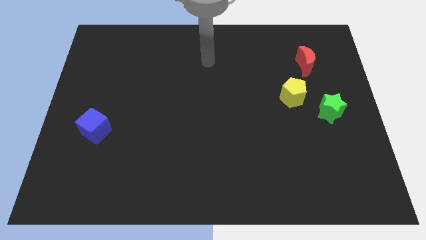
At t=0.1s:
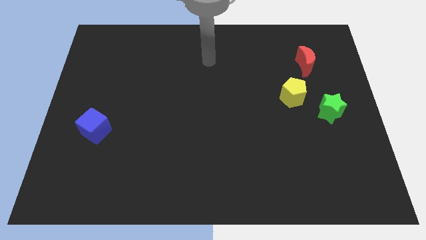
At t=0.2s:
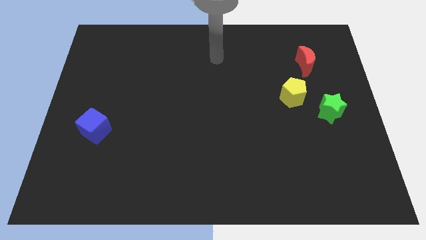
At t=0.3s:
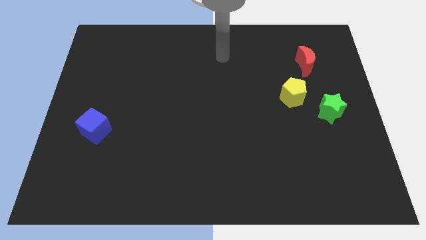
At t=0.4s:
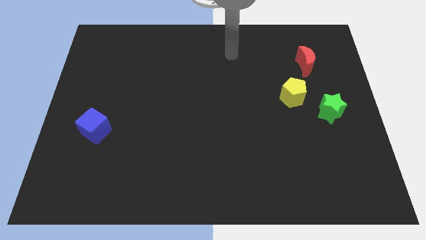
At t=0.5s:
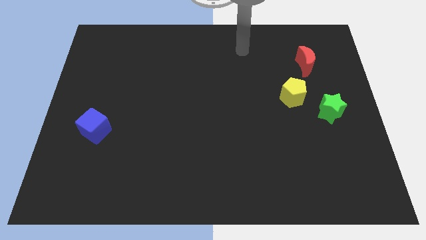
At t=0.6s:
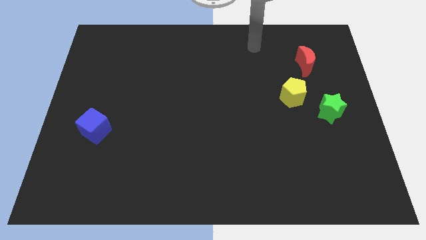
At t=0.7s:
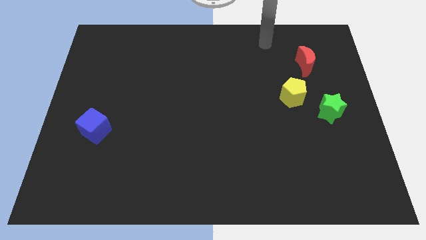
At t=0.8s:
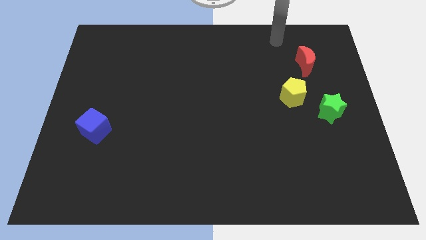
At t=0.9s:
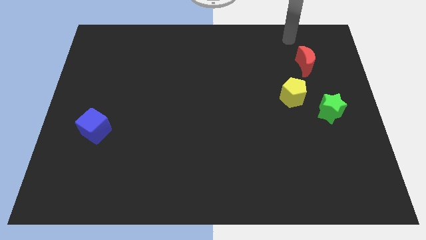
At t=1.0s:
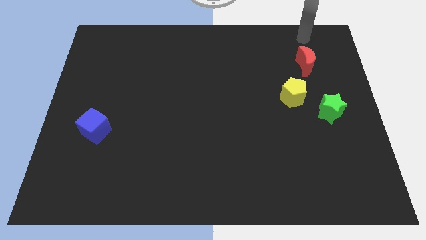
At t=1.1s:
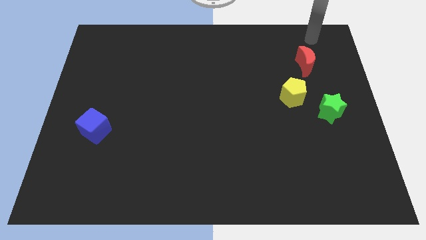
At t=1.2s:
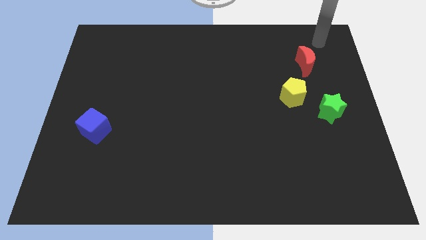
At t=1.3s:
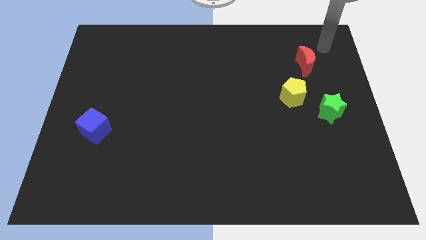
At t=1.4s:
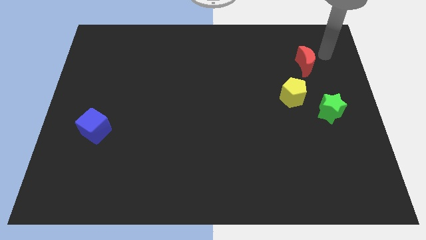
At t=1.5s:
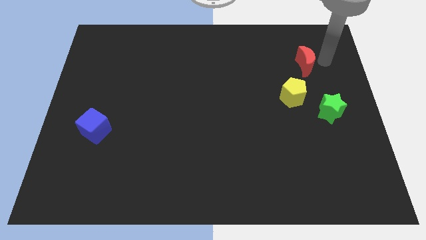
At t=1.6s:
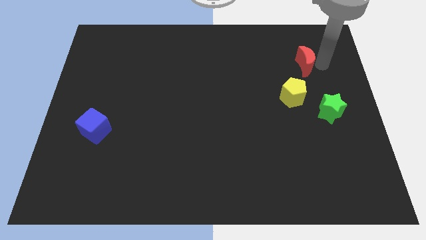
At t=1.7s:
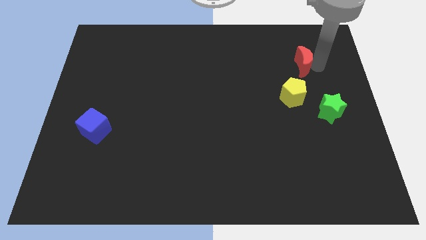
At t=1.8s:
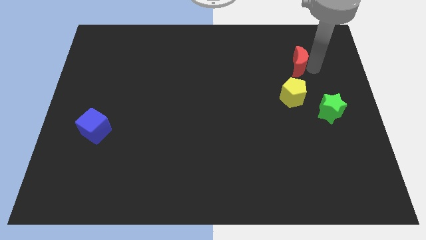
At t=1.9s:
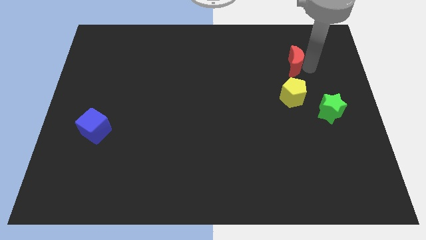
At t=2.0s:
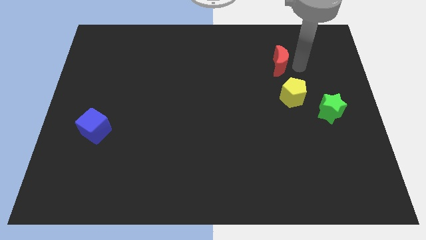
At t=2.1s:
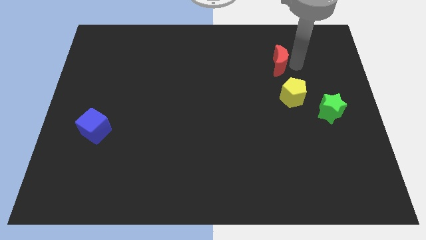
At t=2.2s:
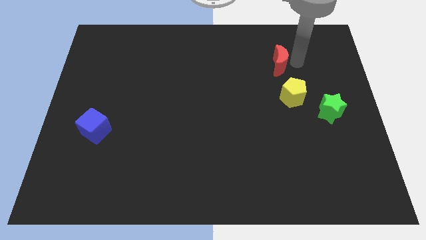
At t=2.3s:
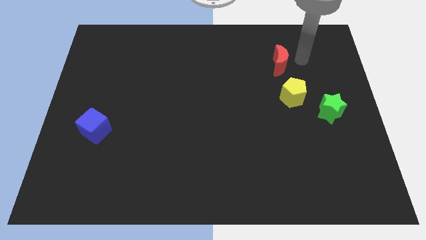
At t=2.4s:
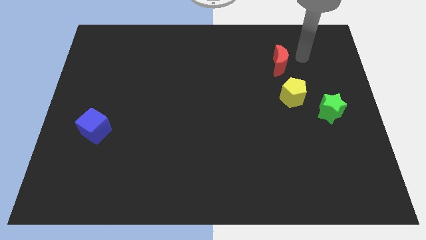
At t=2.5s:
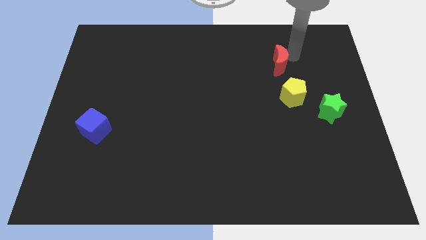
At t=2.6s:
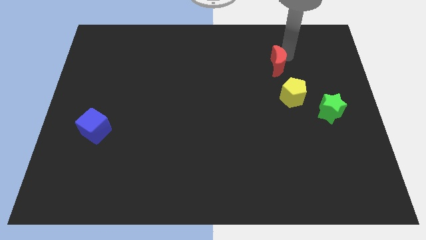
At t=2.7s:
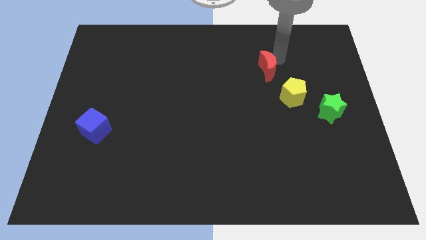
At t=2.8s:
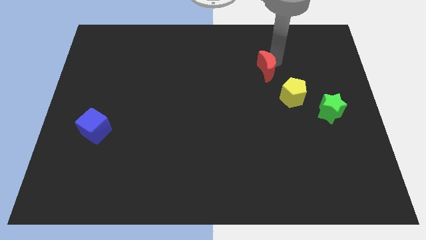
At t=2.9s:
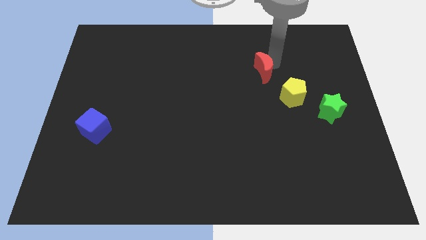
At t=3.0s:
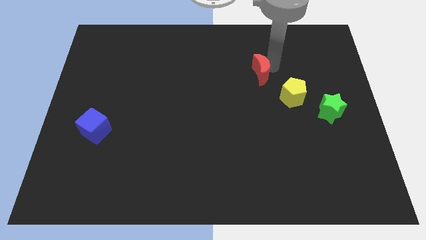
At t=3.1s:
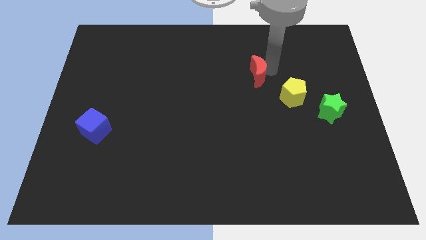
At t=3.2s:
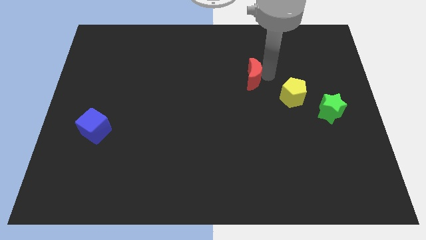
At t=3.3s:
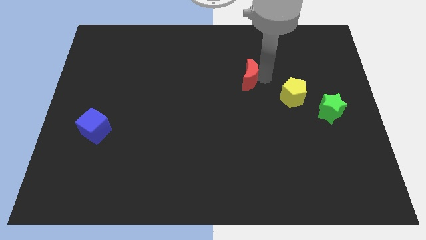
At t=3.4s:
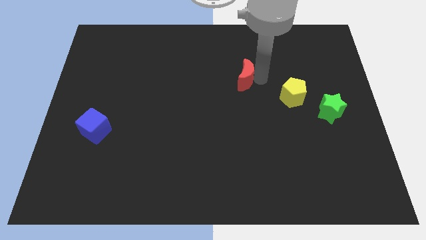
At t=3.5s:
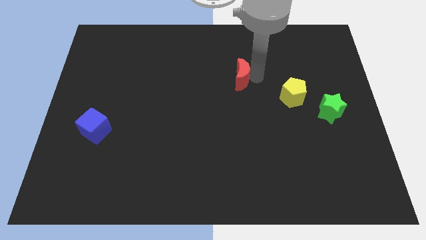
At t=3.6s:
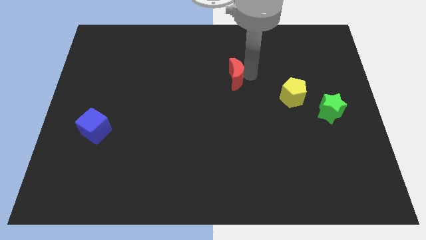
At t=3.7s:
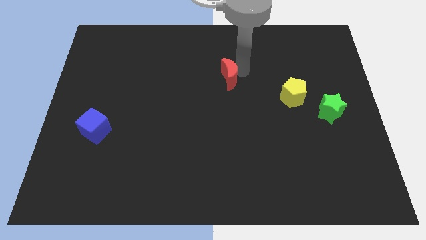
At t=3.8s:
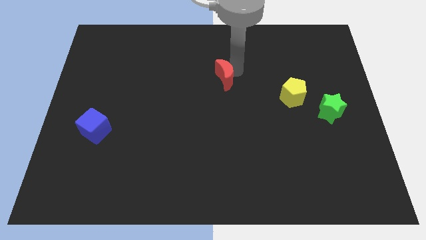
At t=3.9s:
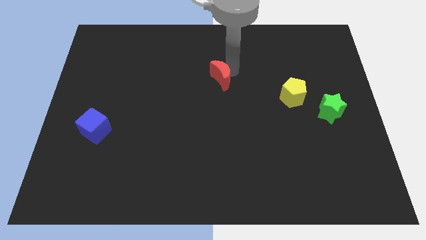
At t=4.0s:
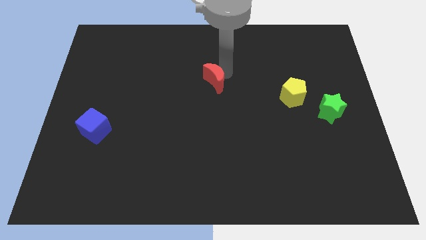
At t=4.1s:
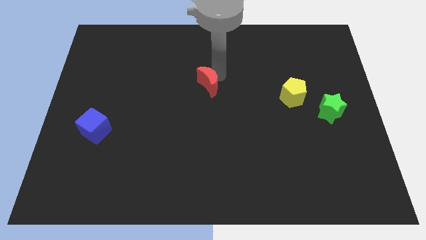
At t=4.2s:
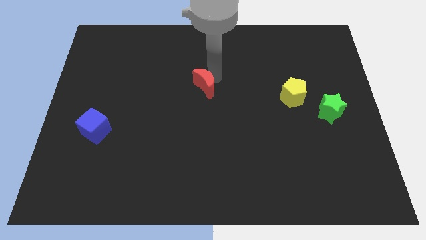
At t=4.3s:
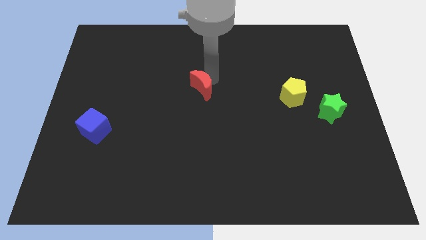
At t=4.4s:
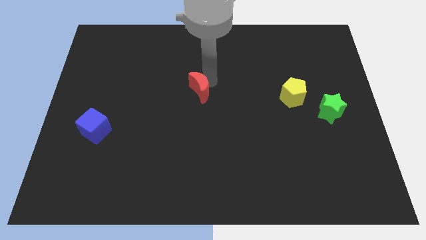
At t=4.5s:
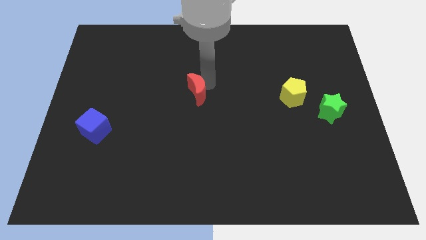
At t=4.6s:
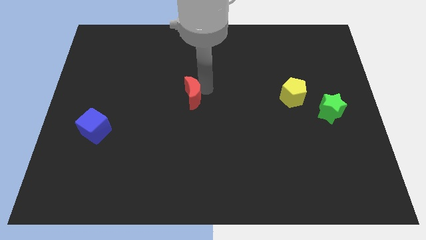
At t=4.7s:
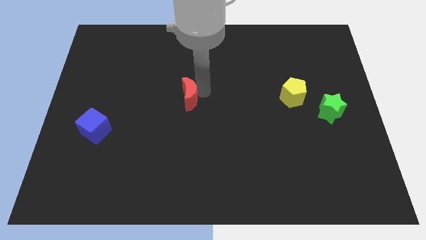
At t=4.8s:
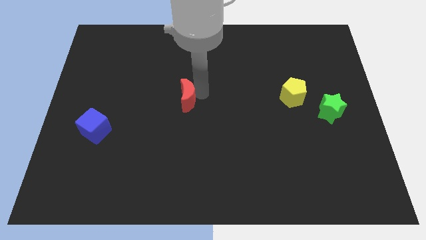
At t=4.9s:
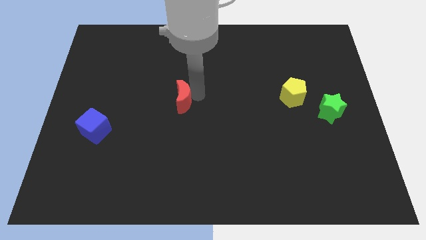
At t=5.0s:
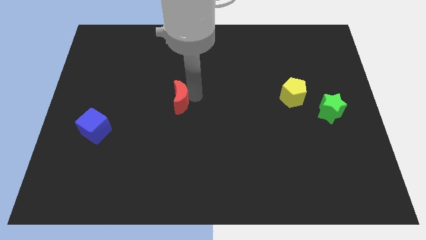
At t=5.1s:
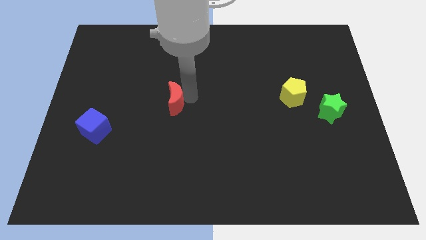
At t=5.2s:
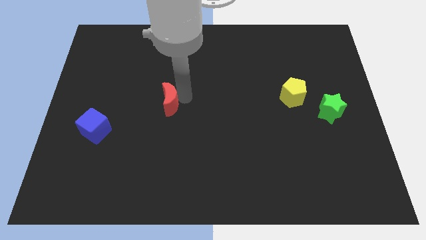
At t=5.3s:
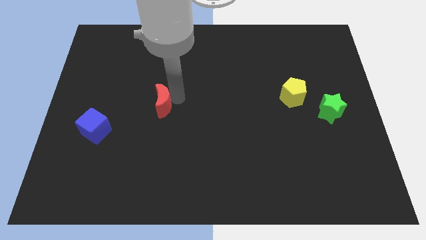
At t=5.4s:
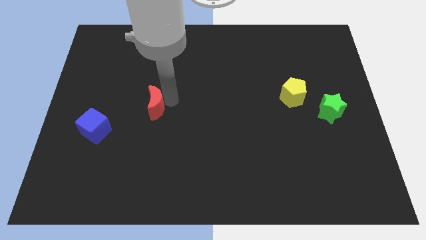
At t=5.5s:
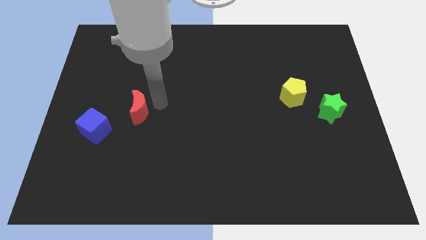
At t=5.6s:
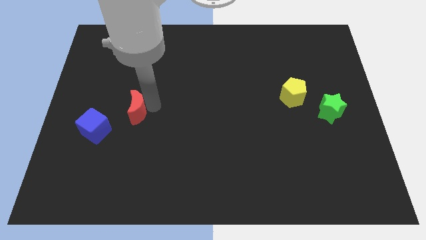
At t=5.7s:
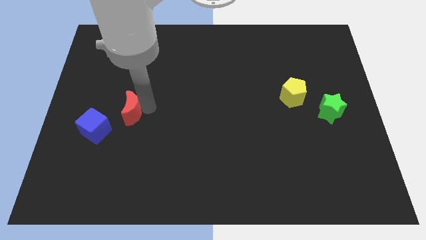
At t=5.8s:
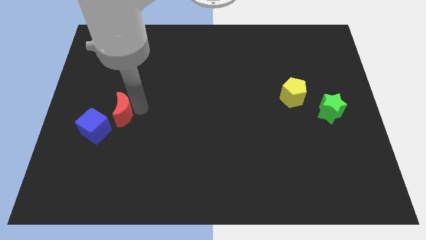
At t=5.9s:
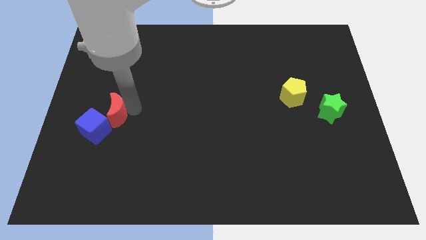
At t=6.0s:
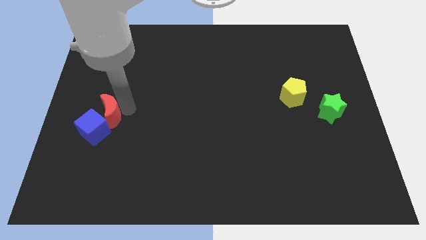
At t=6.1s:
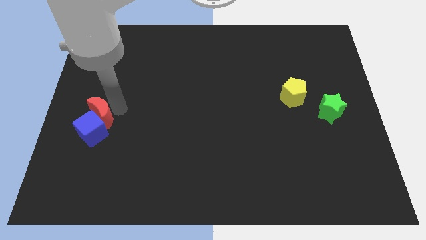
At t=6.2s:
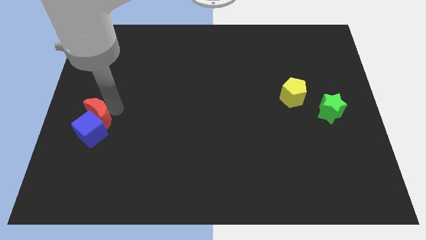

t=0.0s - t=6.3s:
slide the red block to the cube

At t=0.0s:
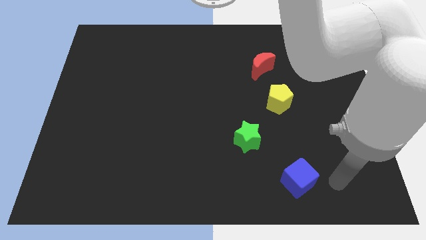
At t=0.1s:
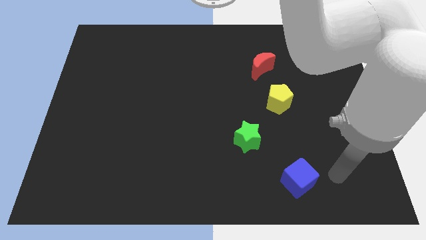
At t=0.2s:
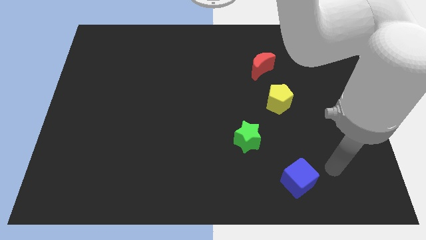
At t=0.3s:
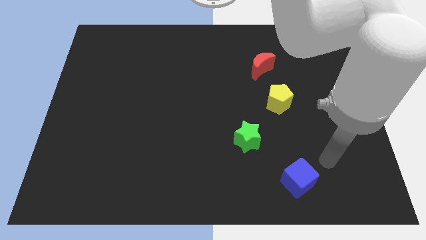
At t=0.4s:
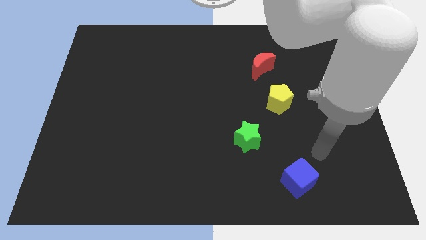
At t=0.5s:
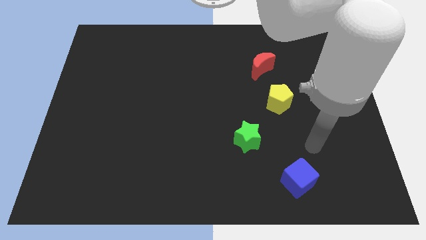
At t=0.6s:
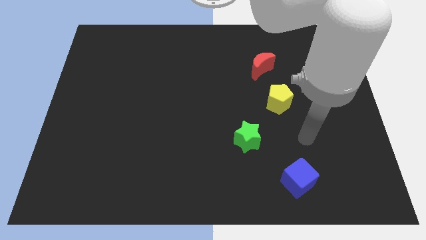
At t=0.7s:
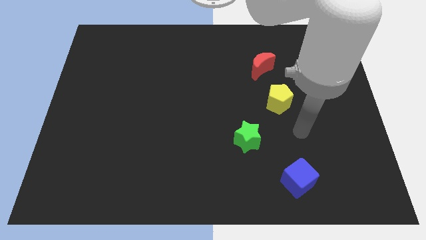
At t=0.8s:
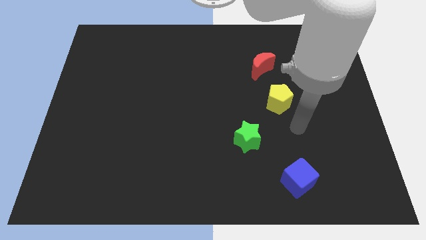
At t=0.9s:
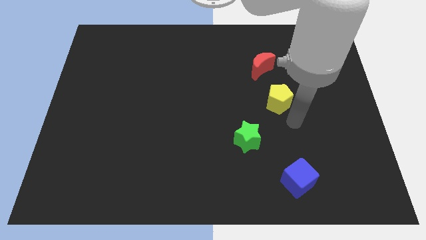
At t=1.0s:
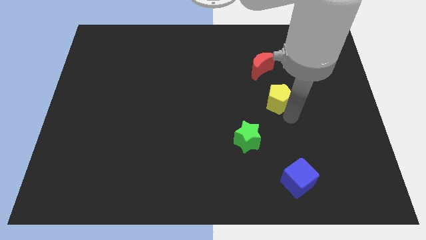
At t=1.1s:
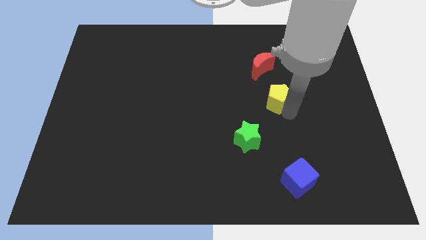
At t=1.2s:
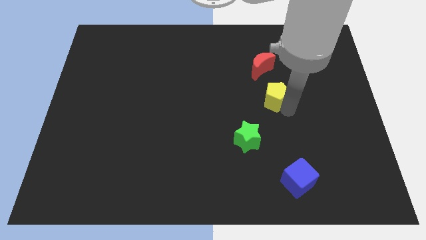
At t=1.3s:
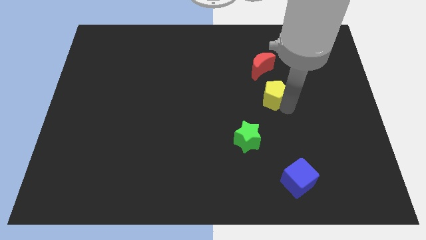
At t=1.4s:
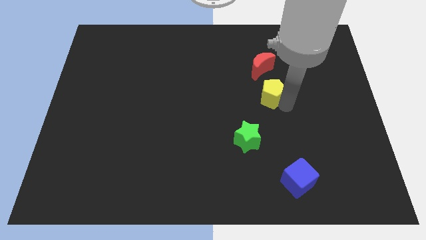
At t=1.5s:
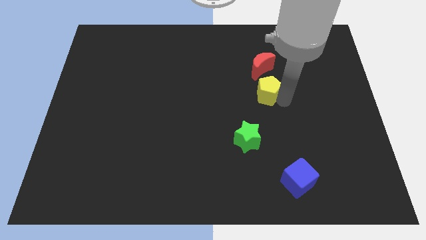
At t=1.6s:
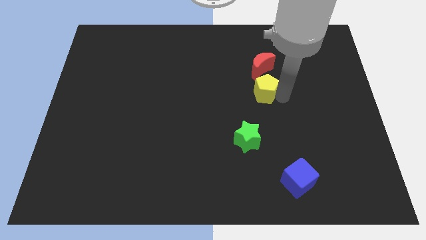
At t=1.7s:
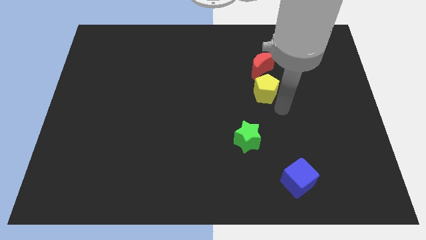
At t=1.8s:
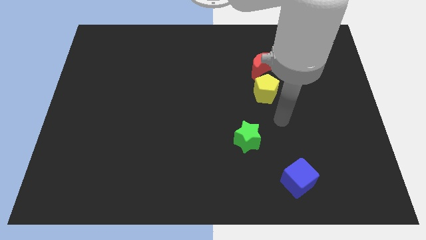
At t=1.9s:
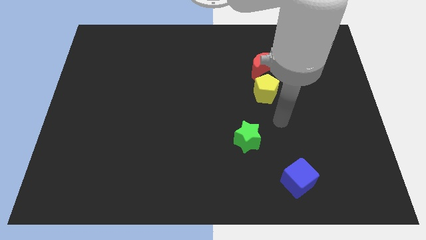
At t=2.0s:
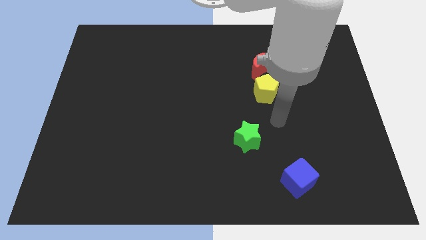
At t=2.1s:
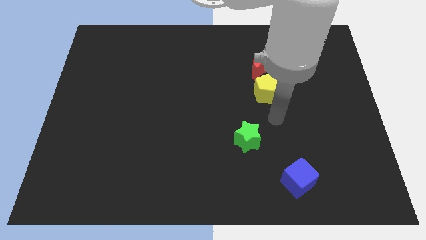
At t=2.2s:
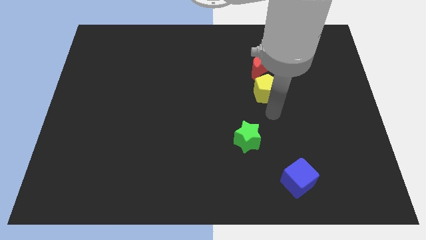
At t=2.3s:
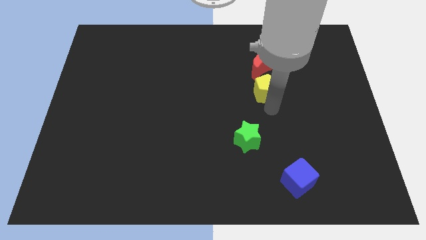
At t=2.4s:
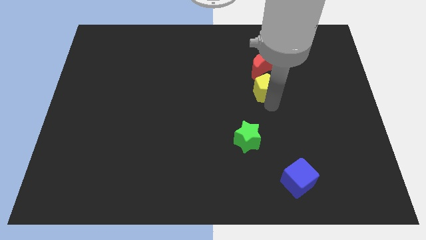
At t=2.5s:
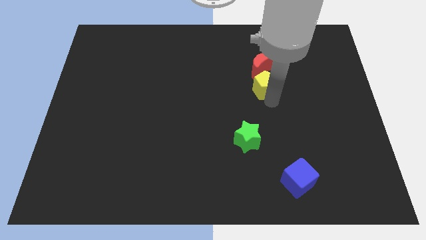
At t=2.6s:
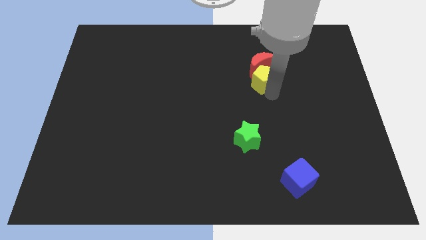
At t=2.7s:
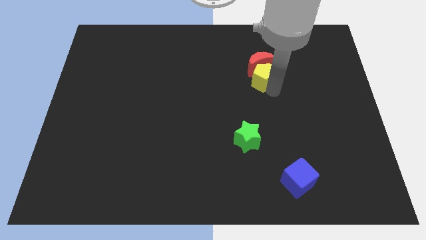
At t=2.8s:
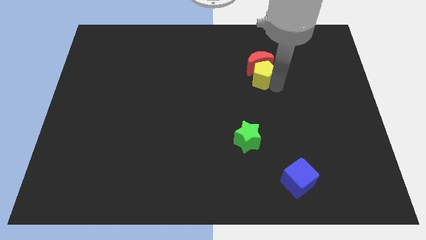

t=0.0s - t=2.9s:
push the yellow block next to the moon
